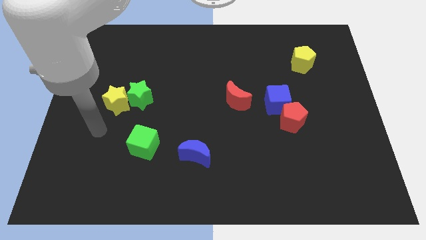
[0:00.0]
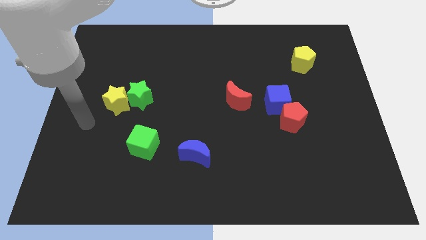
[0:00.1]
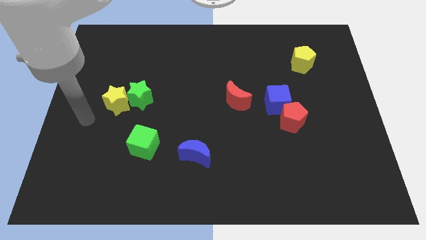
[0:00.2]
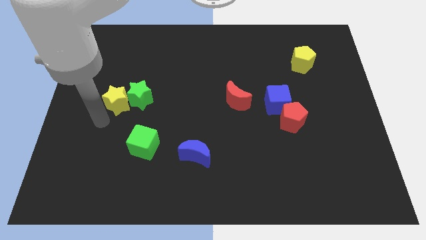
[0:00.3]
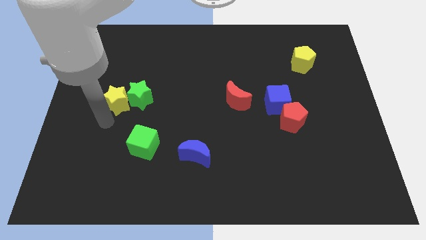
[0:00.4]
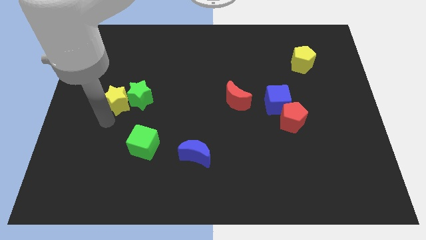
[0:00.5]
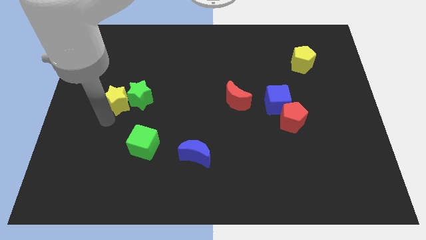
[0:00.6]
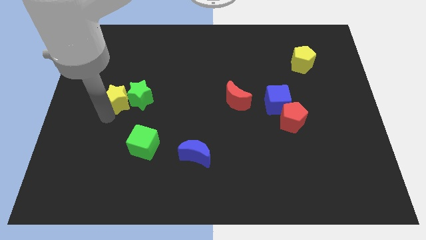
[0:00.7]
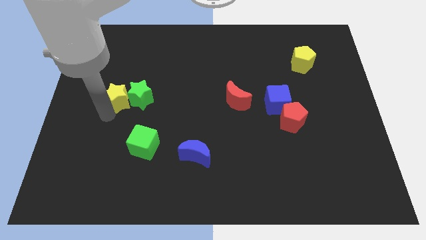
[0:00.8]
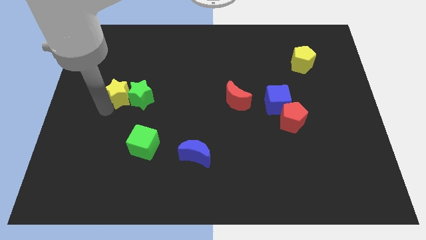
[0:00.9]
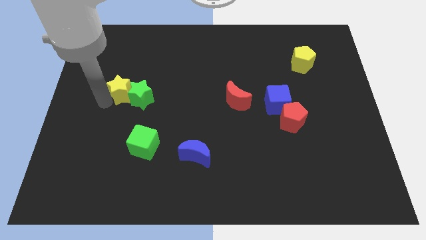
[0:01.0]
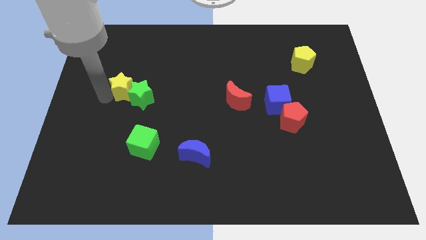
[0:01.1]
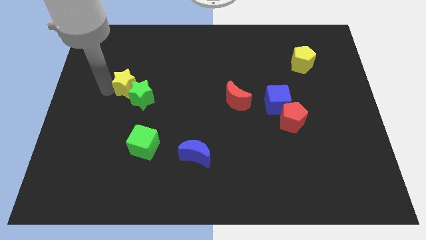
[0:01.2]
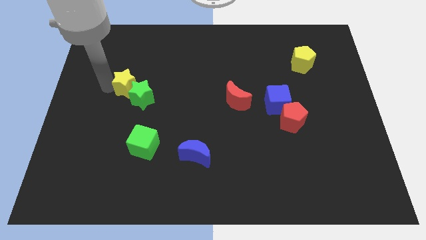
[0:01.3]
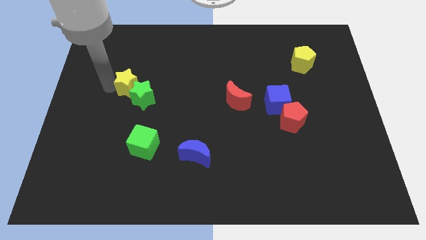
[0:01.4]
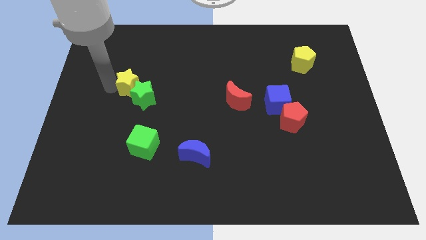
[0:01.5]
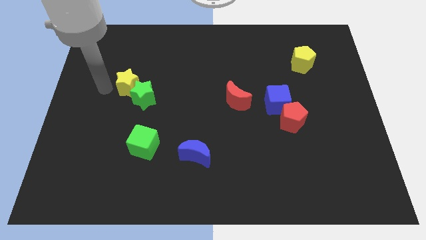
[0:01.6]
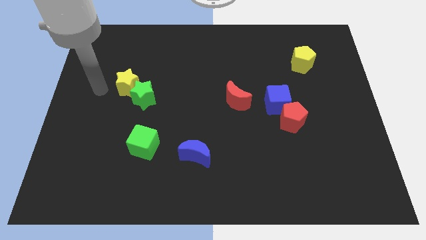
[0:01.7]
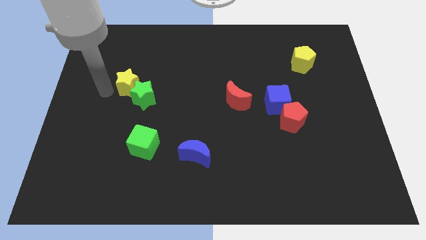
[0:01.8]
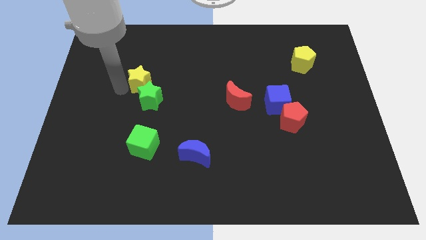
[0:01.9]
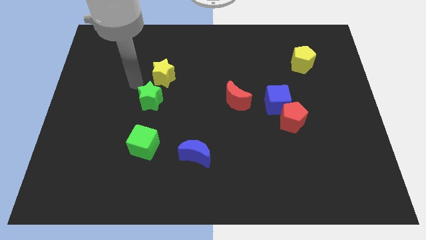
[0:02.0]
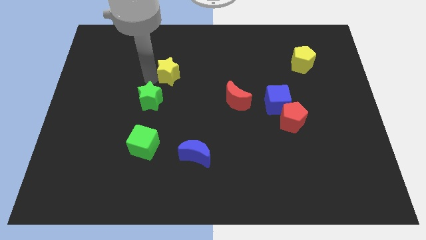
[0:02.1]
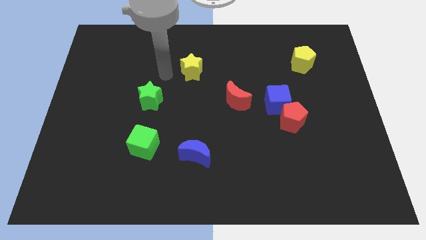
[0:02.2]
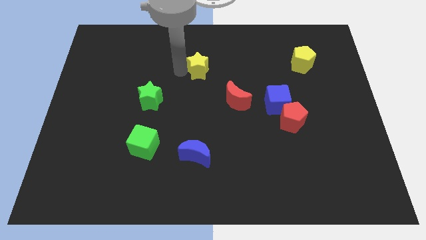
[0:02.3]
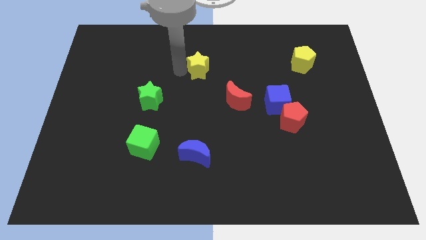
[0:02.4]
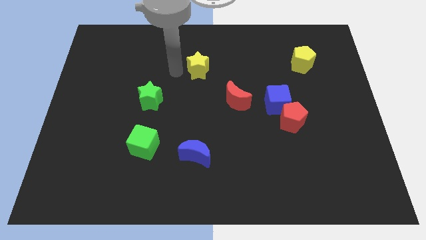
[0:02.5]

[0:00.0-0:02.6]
separate the yellow star from the green star

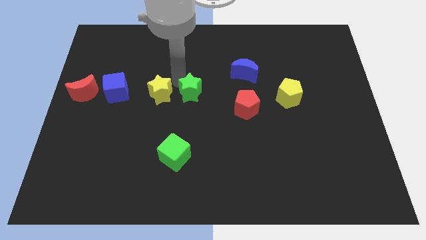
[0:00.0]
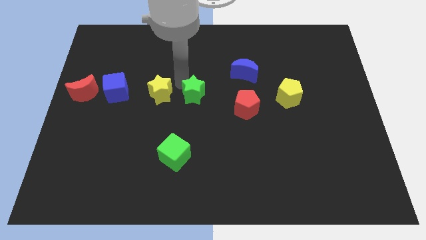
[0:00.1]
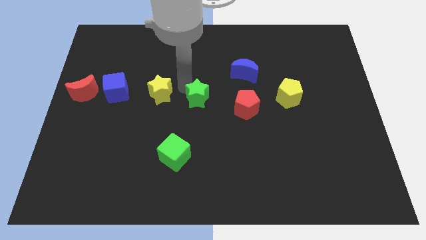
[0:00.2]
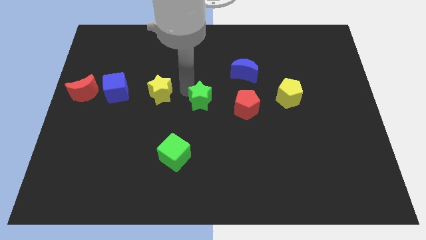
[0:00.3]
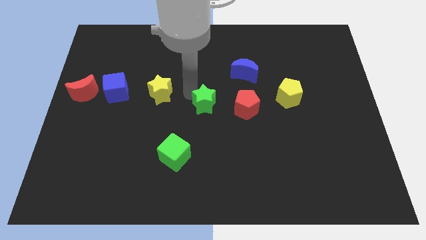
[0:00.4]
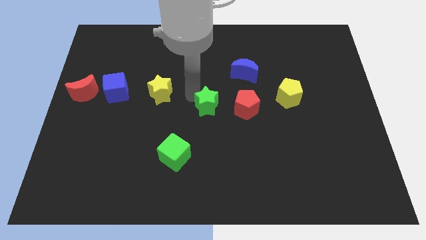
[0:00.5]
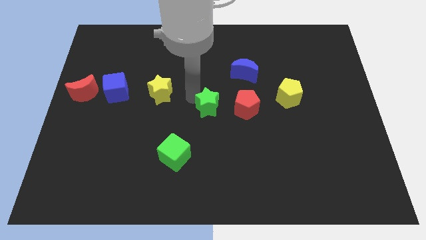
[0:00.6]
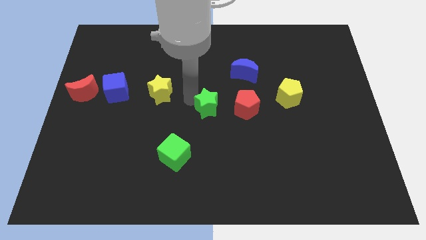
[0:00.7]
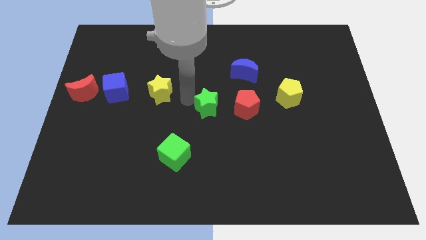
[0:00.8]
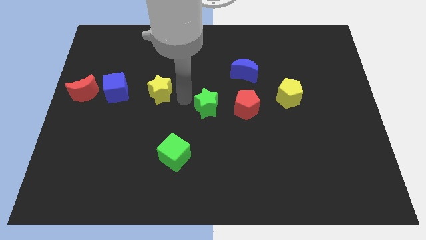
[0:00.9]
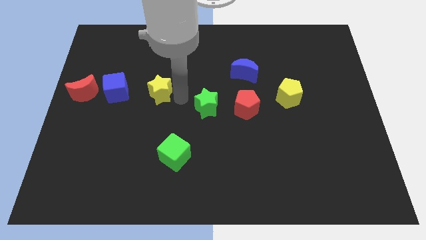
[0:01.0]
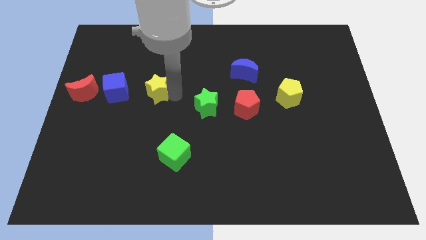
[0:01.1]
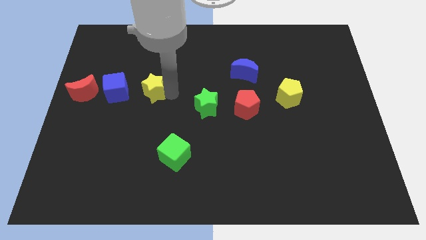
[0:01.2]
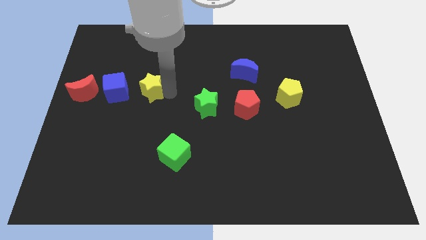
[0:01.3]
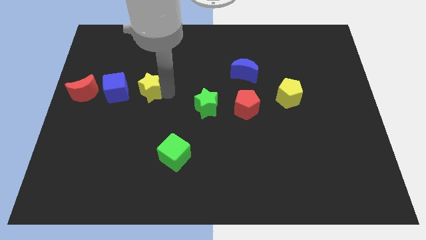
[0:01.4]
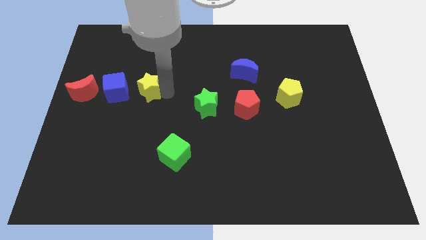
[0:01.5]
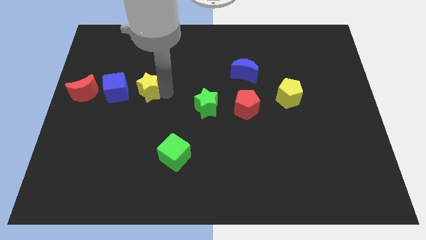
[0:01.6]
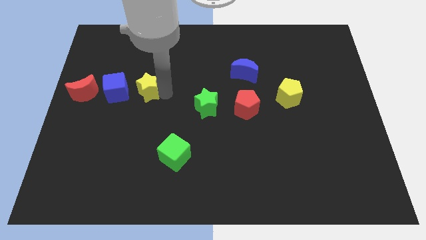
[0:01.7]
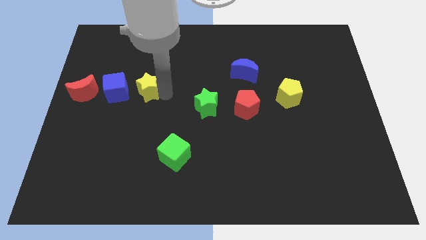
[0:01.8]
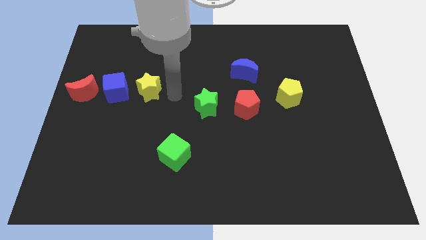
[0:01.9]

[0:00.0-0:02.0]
place the green star parallel to the left side of the red pentagon

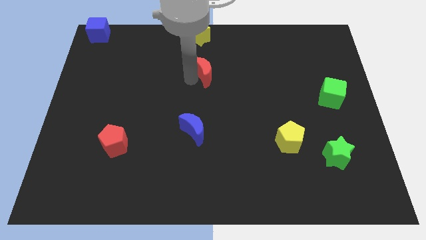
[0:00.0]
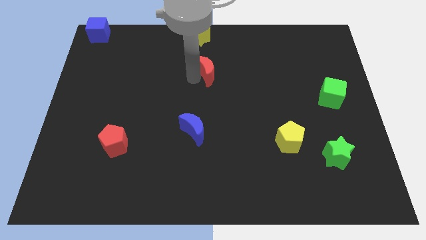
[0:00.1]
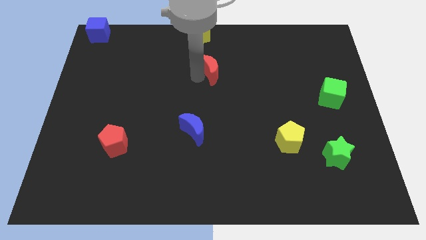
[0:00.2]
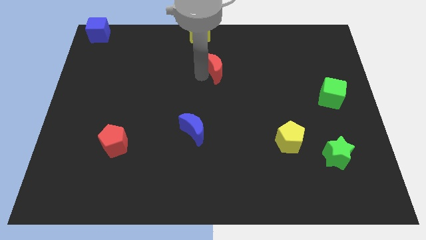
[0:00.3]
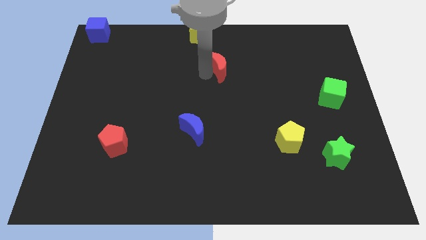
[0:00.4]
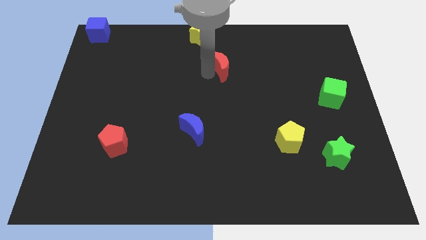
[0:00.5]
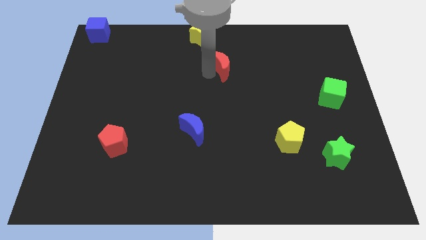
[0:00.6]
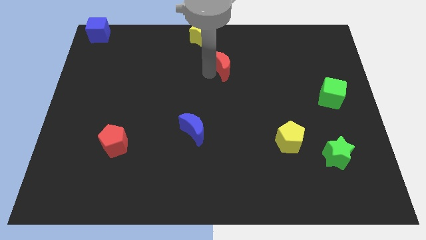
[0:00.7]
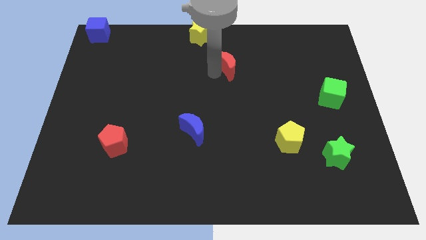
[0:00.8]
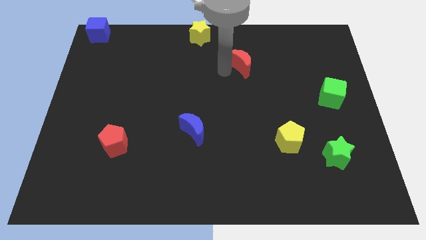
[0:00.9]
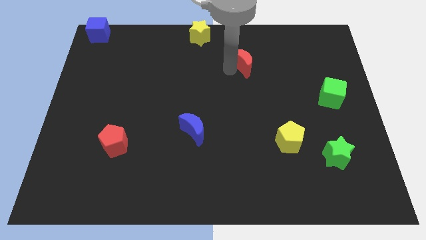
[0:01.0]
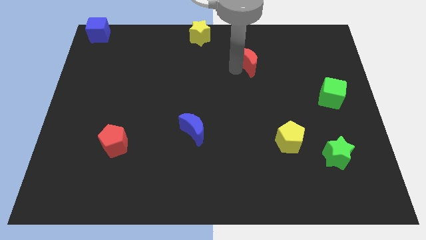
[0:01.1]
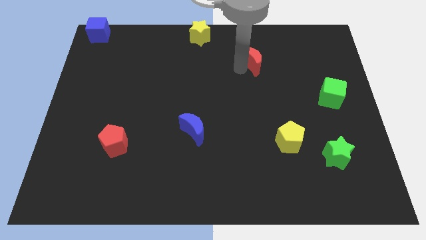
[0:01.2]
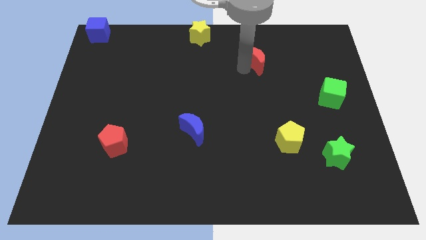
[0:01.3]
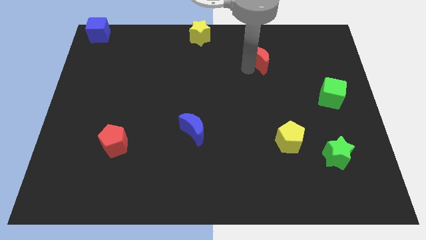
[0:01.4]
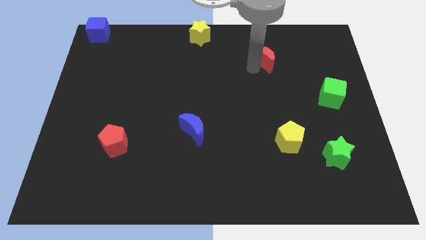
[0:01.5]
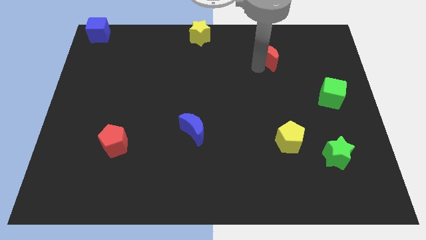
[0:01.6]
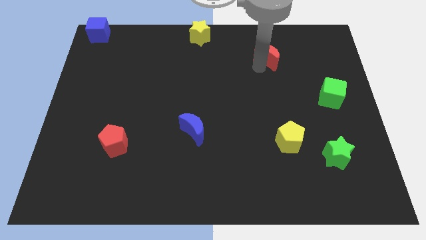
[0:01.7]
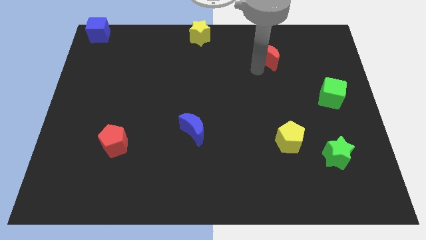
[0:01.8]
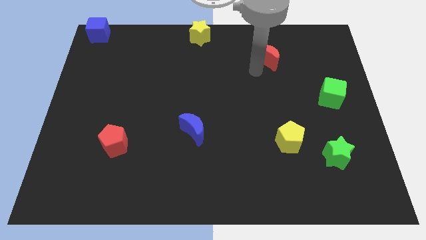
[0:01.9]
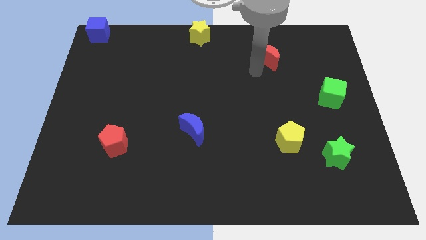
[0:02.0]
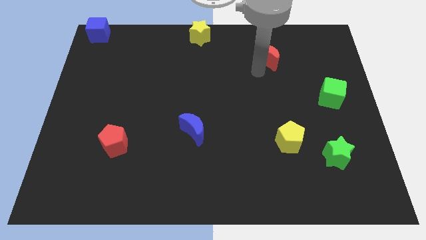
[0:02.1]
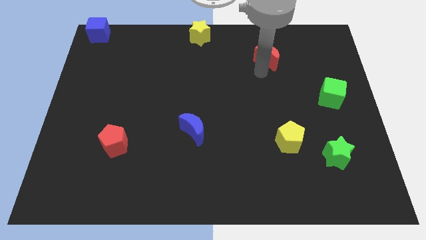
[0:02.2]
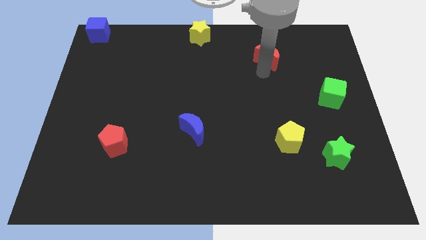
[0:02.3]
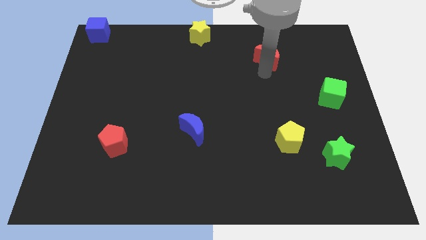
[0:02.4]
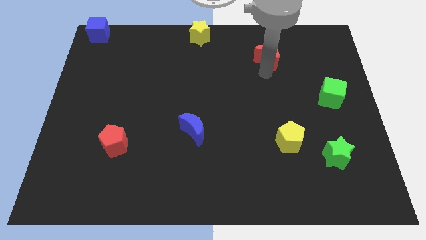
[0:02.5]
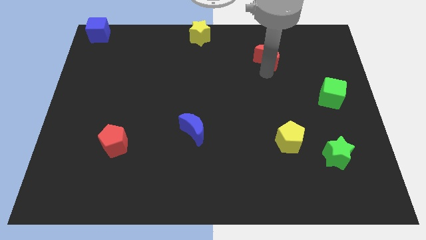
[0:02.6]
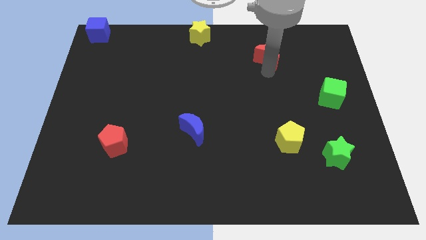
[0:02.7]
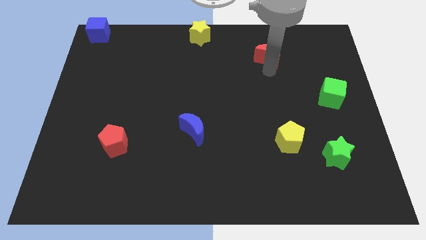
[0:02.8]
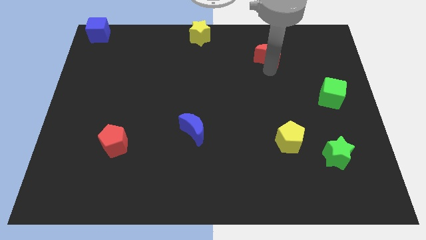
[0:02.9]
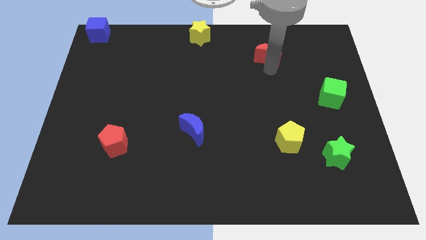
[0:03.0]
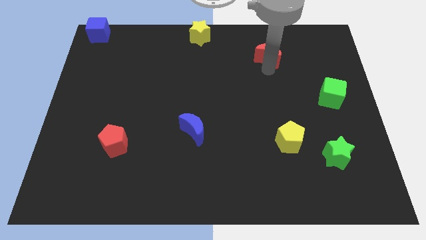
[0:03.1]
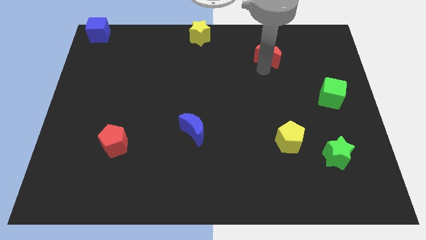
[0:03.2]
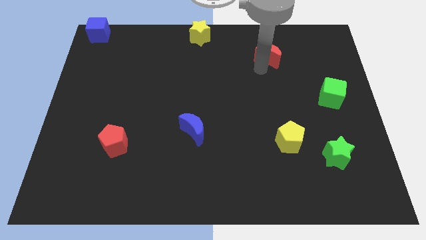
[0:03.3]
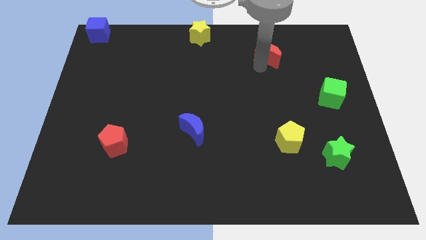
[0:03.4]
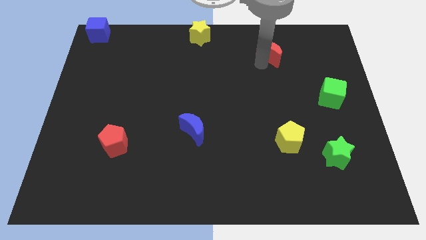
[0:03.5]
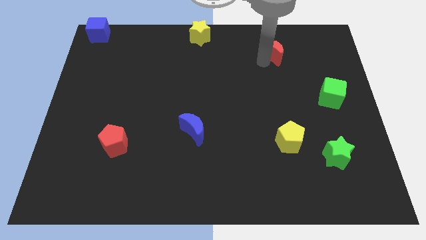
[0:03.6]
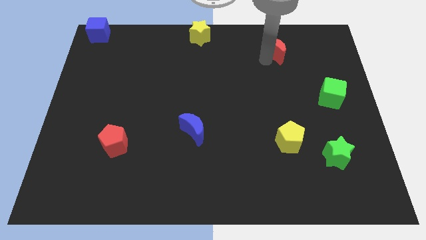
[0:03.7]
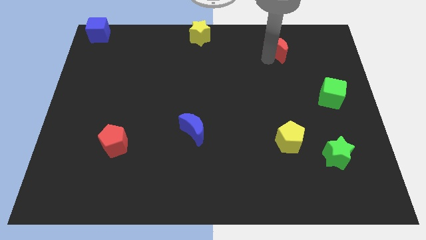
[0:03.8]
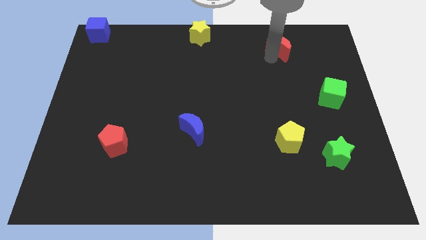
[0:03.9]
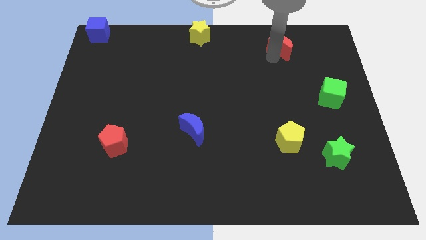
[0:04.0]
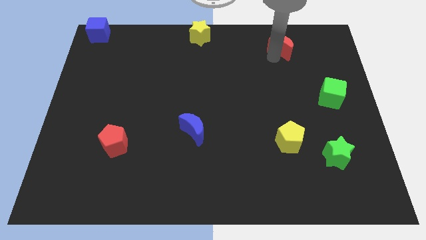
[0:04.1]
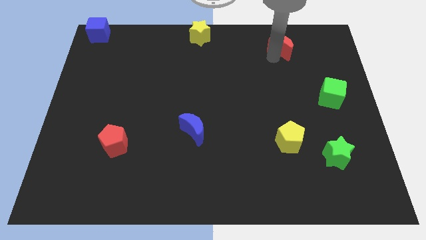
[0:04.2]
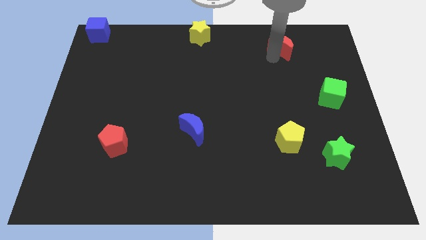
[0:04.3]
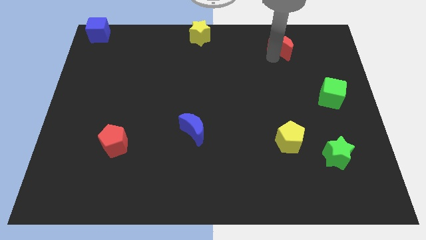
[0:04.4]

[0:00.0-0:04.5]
move the red crescent towards the top of the board

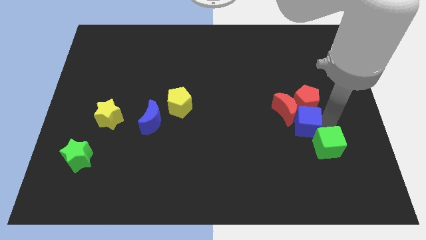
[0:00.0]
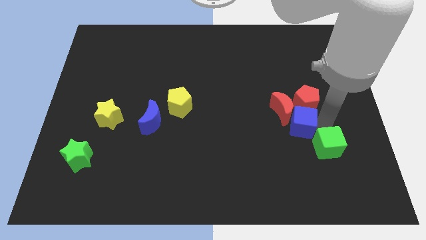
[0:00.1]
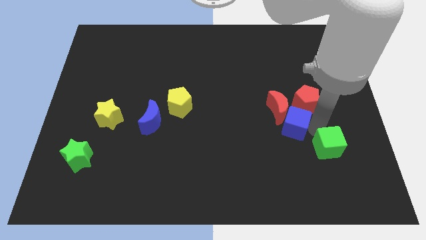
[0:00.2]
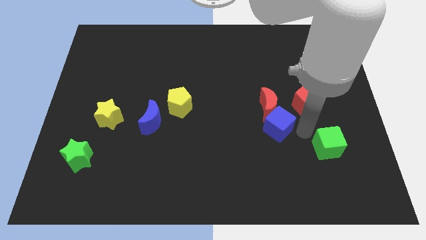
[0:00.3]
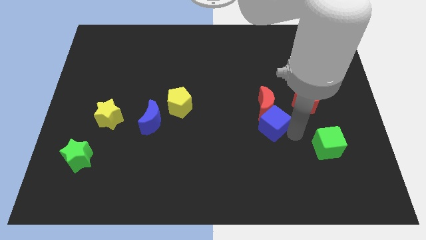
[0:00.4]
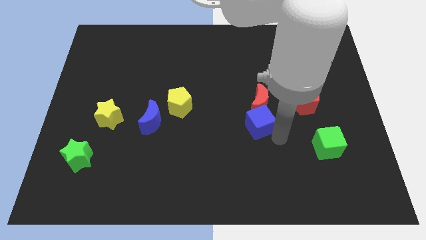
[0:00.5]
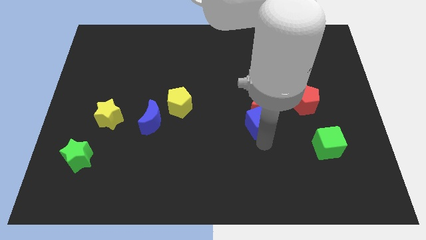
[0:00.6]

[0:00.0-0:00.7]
place the blue cube below the red crescent
